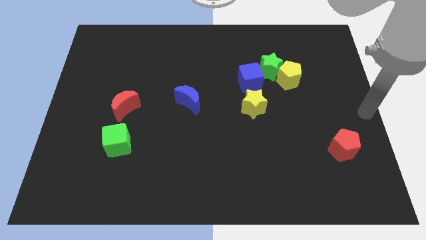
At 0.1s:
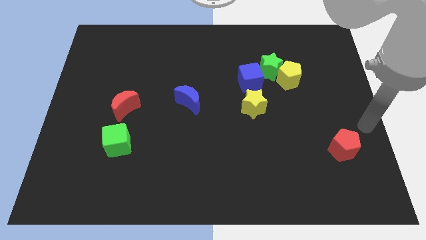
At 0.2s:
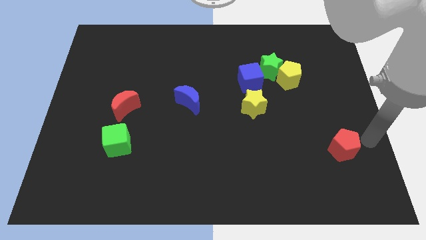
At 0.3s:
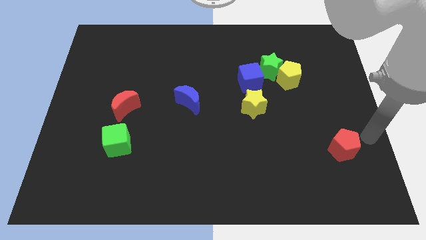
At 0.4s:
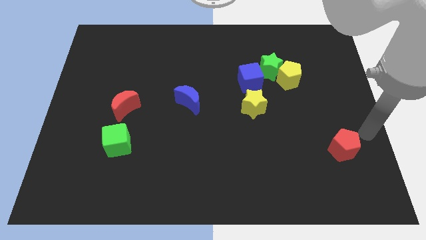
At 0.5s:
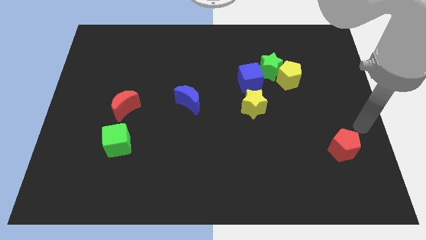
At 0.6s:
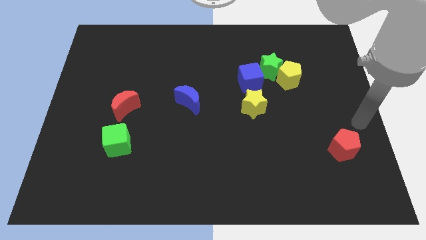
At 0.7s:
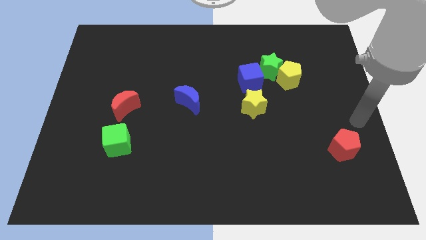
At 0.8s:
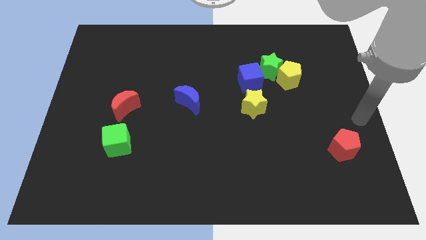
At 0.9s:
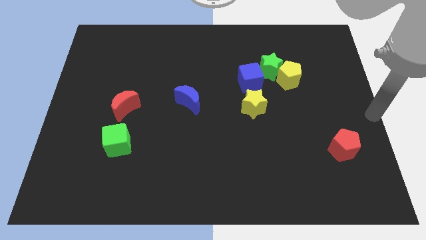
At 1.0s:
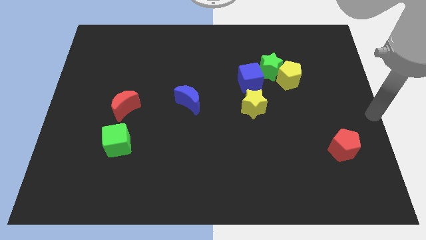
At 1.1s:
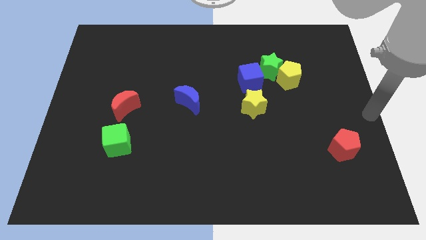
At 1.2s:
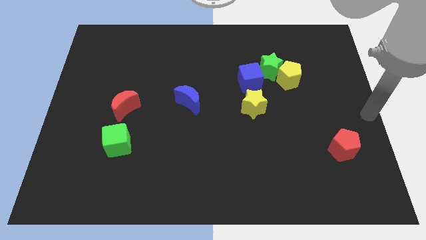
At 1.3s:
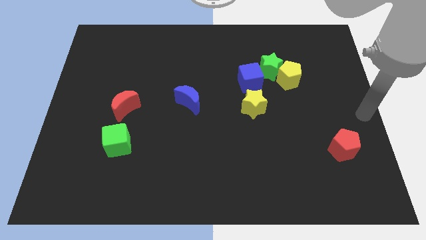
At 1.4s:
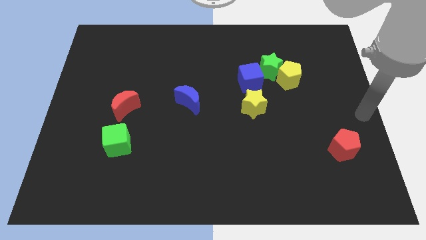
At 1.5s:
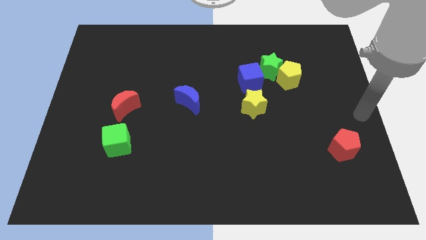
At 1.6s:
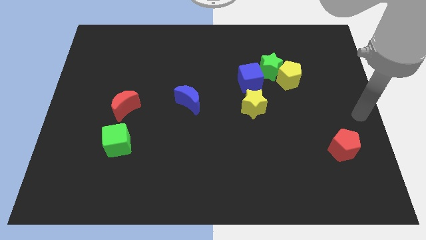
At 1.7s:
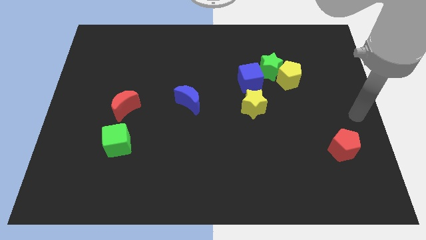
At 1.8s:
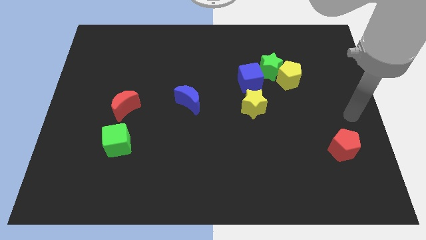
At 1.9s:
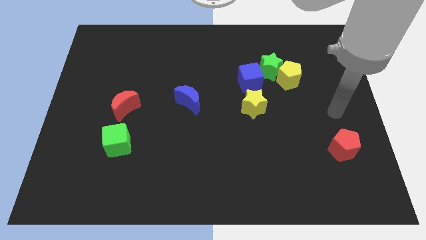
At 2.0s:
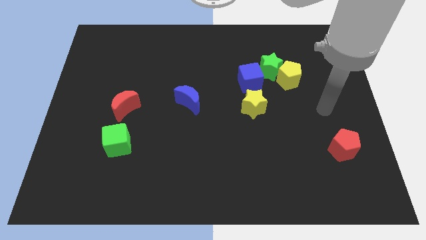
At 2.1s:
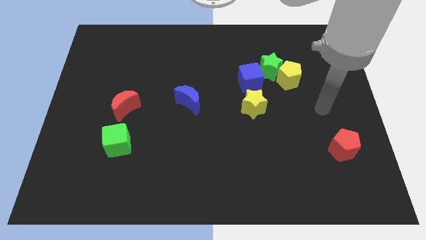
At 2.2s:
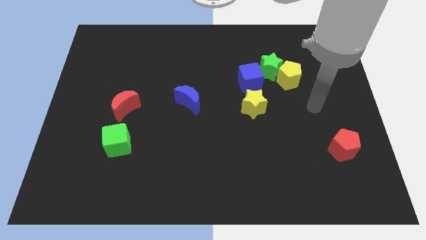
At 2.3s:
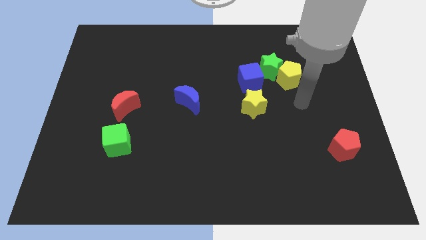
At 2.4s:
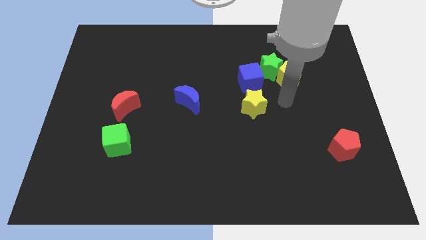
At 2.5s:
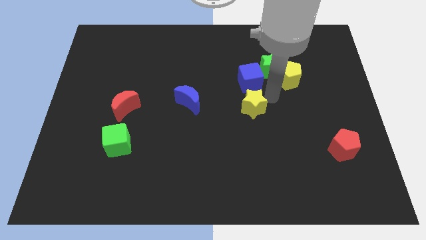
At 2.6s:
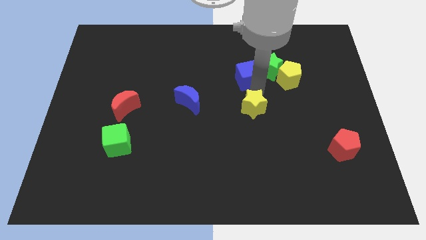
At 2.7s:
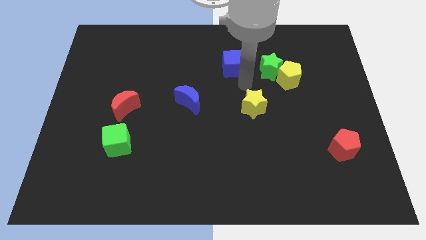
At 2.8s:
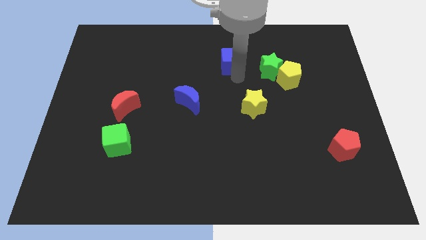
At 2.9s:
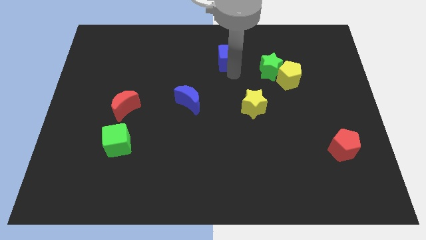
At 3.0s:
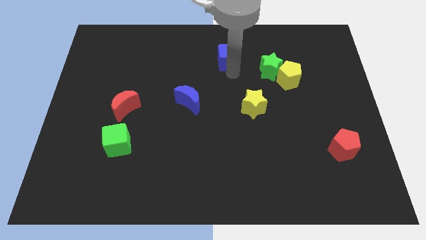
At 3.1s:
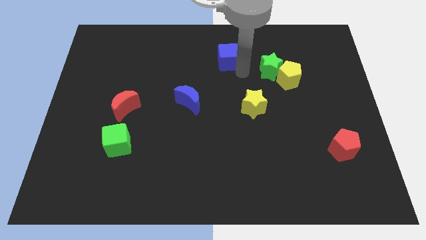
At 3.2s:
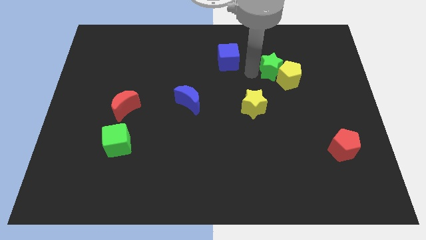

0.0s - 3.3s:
move the blue cube towards the top center of the board

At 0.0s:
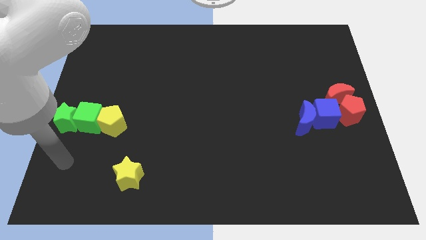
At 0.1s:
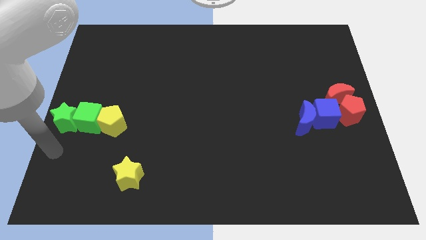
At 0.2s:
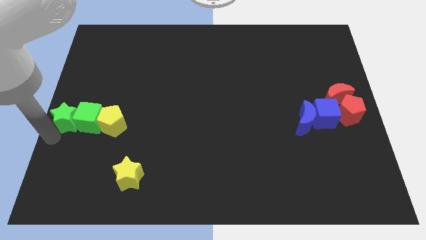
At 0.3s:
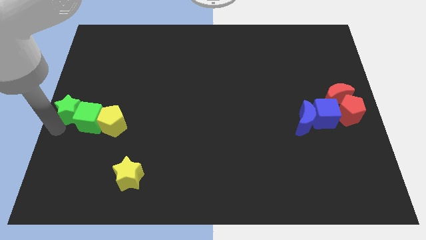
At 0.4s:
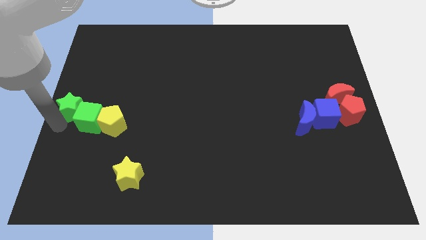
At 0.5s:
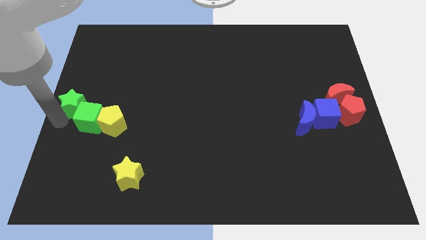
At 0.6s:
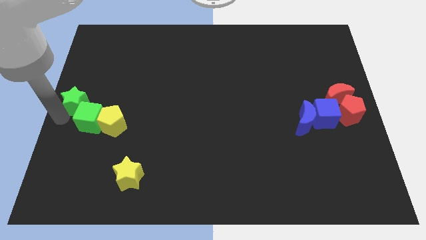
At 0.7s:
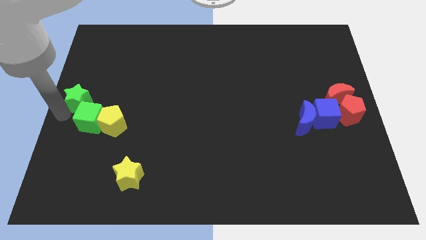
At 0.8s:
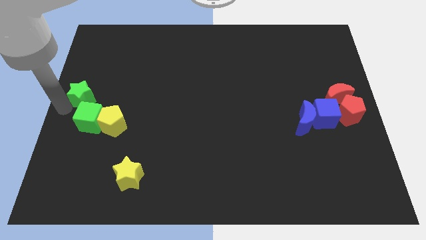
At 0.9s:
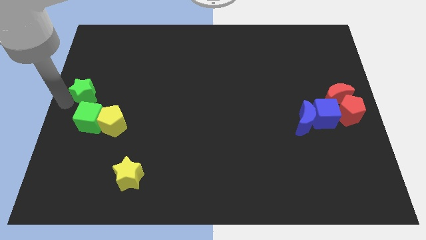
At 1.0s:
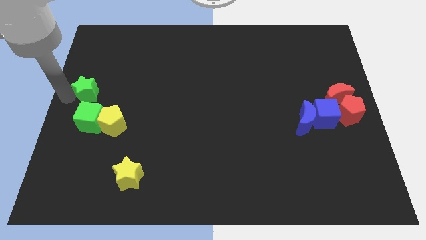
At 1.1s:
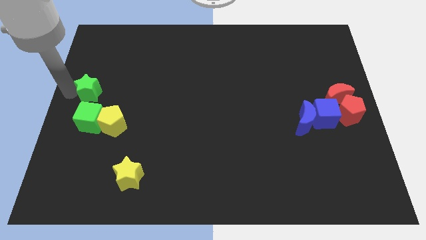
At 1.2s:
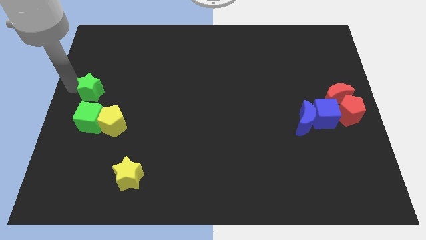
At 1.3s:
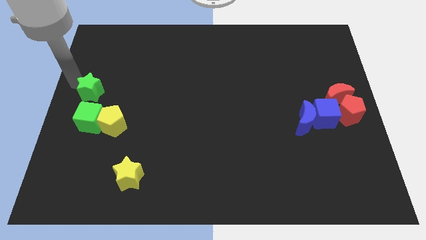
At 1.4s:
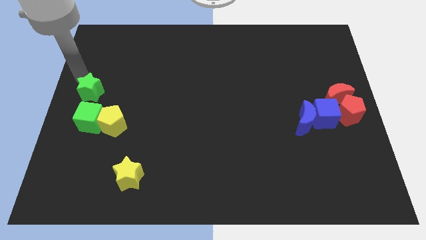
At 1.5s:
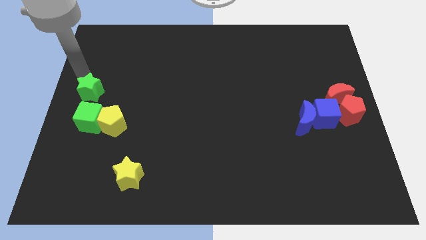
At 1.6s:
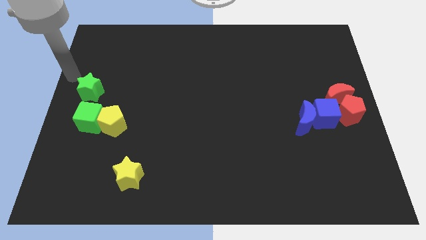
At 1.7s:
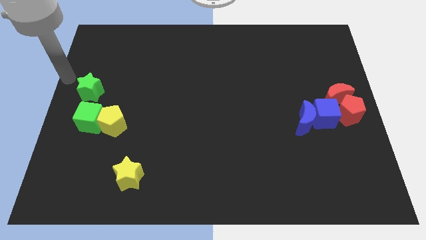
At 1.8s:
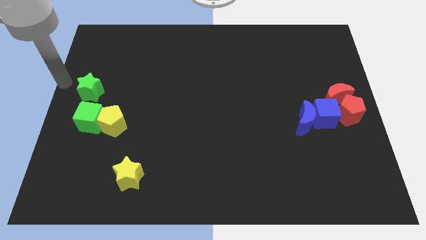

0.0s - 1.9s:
move the green star to the top of the board

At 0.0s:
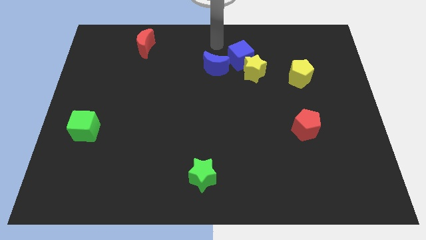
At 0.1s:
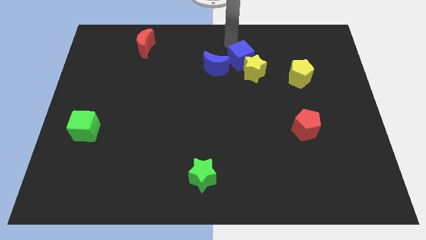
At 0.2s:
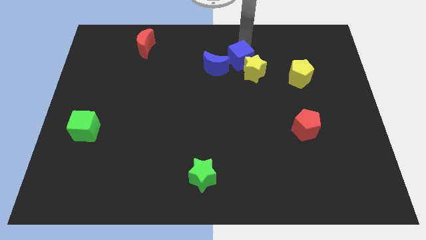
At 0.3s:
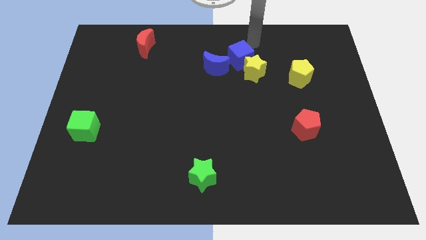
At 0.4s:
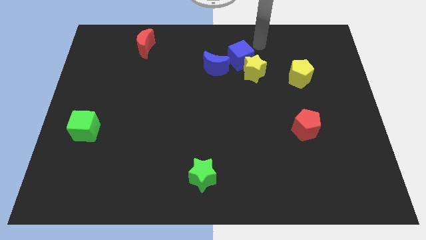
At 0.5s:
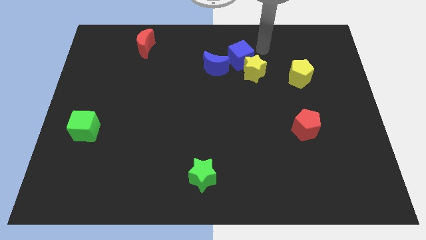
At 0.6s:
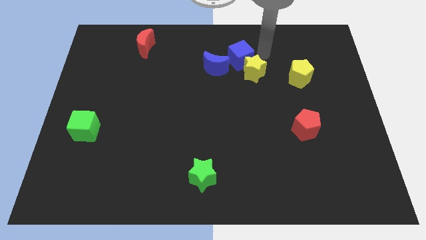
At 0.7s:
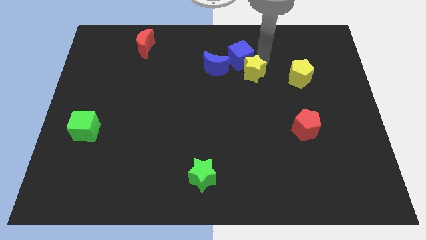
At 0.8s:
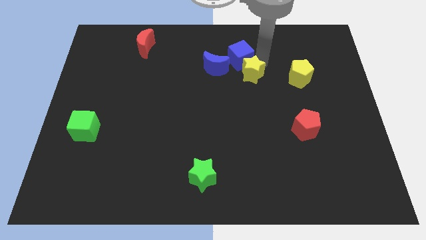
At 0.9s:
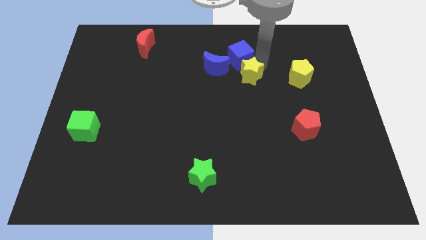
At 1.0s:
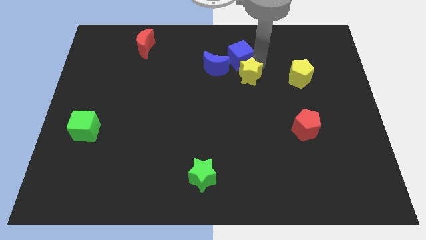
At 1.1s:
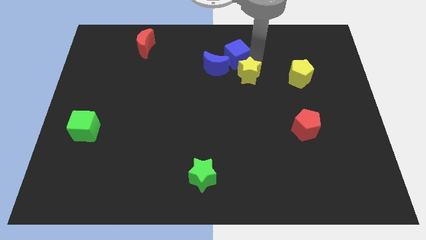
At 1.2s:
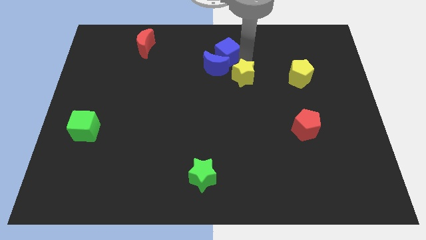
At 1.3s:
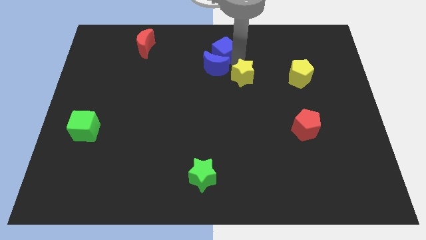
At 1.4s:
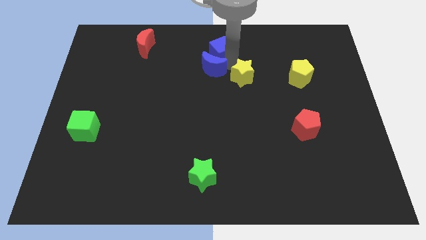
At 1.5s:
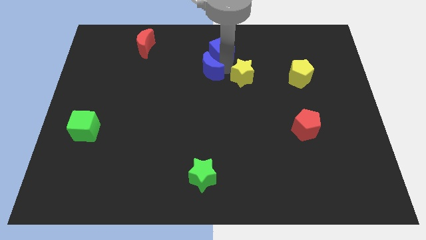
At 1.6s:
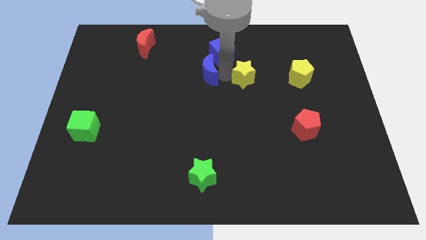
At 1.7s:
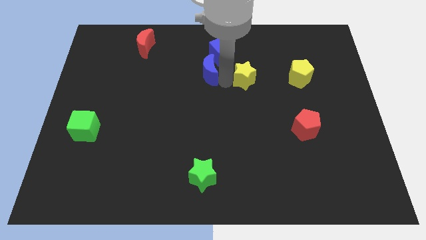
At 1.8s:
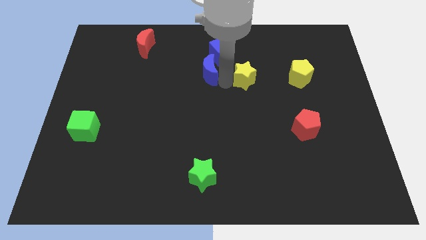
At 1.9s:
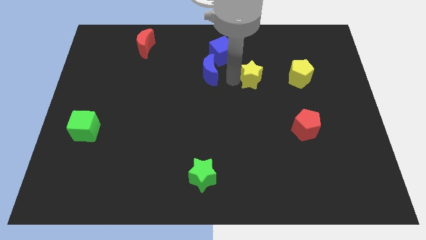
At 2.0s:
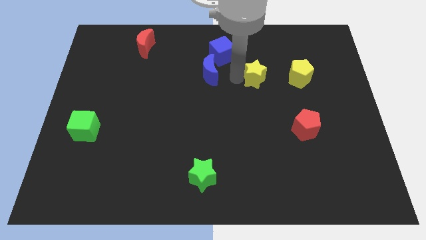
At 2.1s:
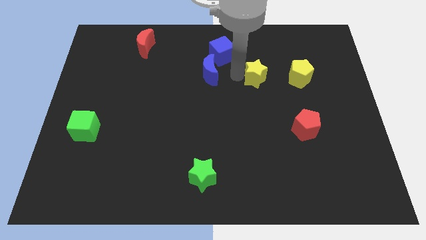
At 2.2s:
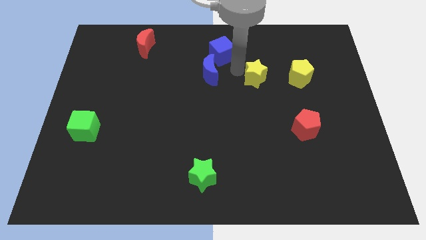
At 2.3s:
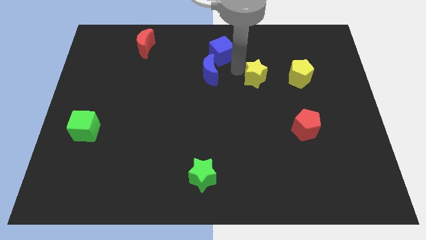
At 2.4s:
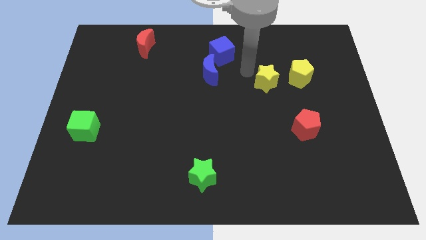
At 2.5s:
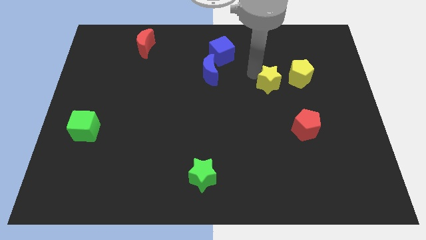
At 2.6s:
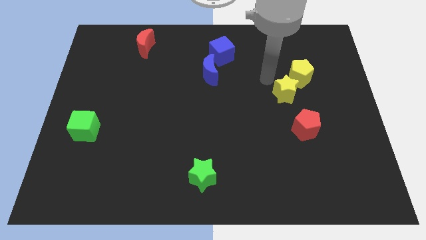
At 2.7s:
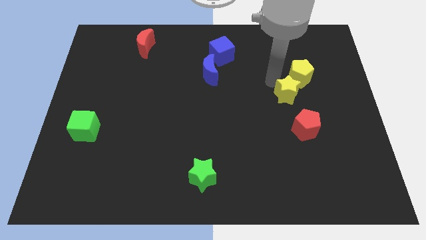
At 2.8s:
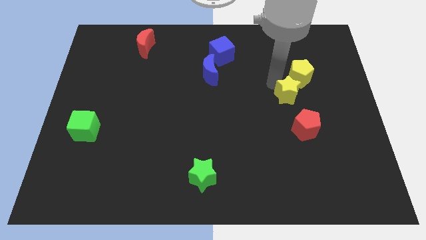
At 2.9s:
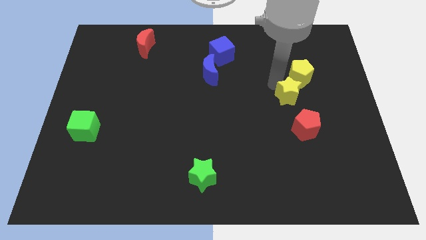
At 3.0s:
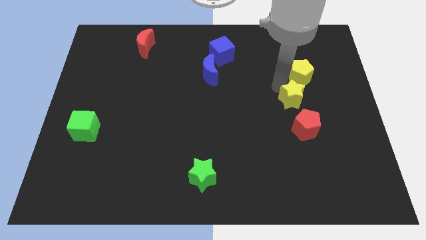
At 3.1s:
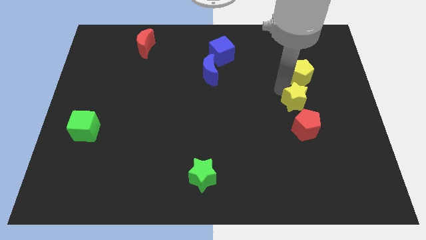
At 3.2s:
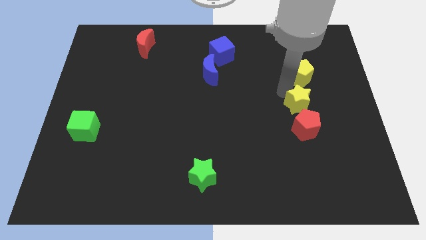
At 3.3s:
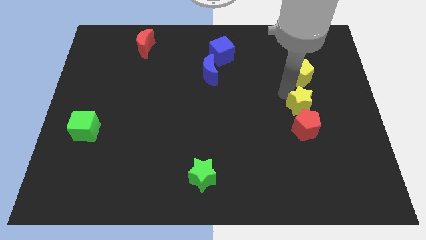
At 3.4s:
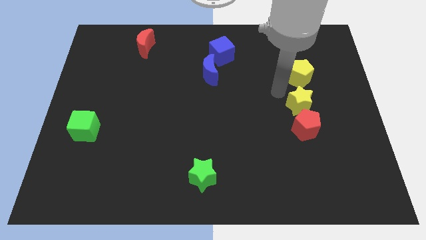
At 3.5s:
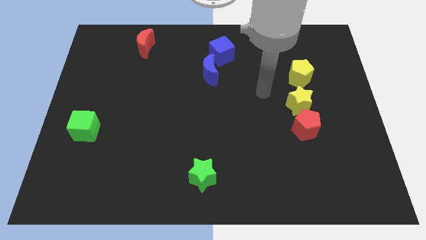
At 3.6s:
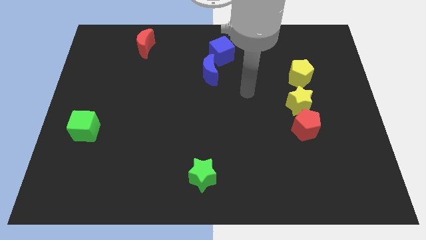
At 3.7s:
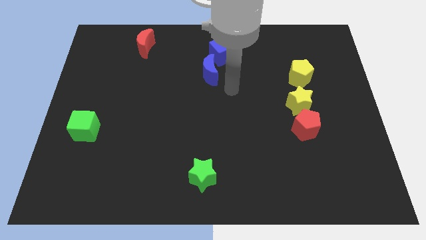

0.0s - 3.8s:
separate yellow star from blue cube
